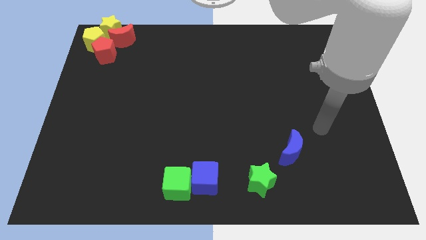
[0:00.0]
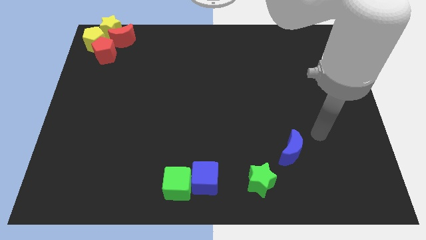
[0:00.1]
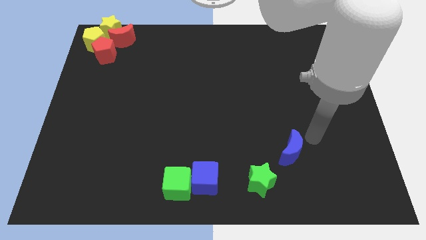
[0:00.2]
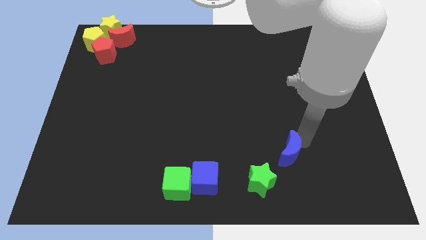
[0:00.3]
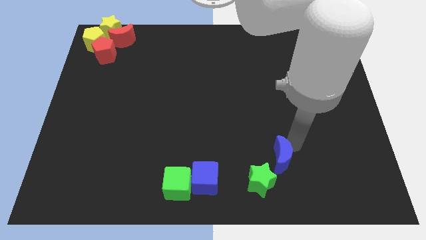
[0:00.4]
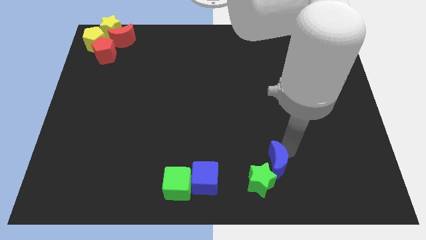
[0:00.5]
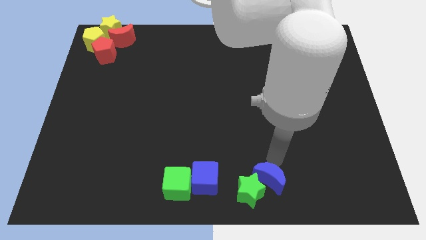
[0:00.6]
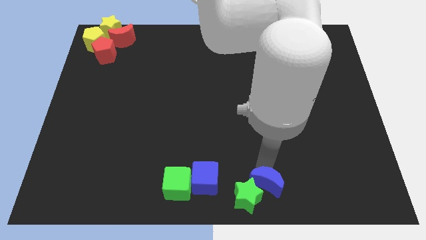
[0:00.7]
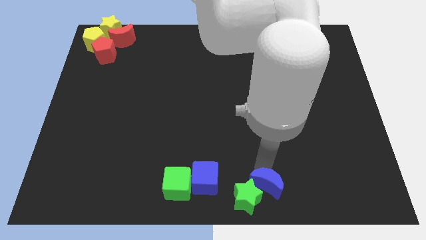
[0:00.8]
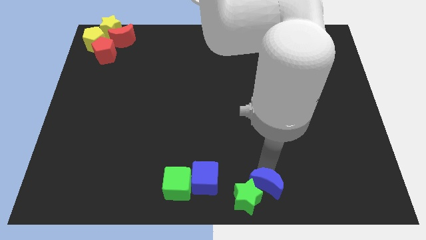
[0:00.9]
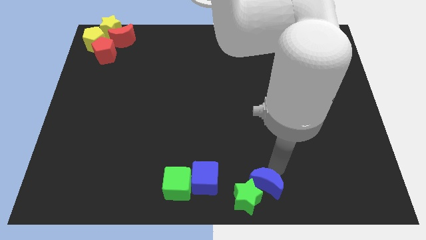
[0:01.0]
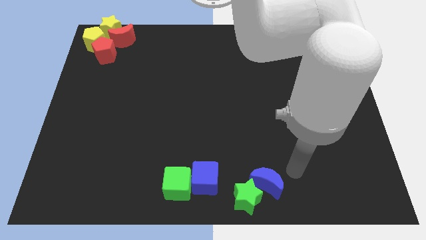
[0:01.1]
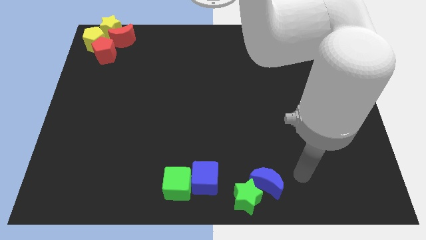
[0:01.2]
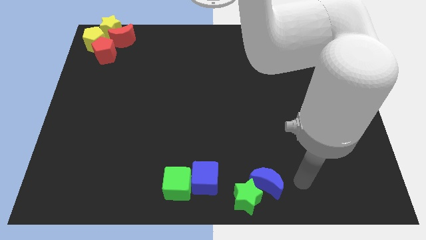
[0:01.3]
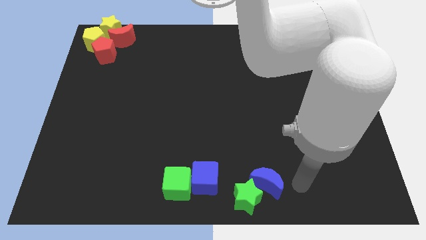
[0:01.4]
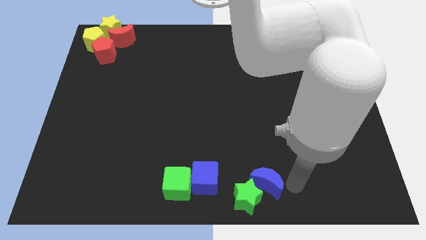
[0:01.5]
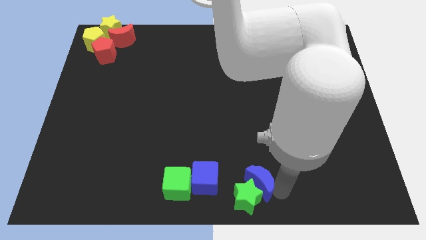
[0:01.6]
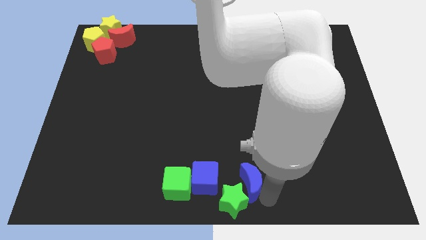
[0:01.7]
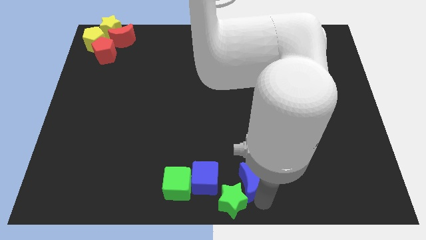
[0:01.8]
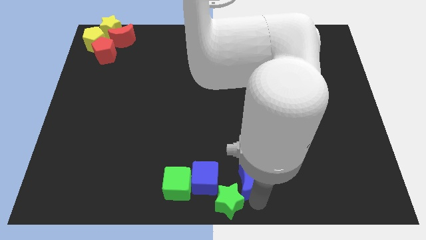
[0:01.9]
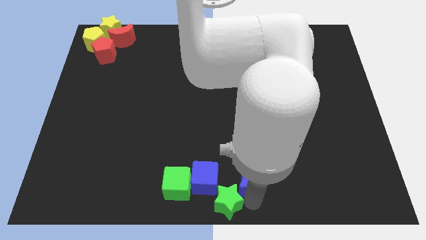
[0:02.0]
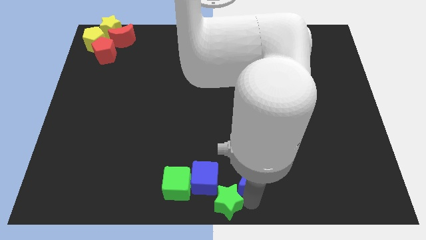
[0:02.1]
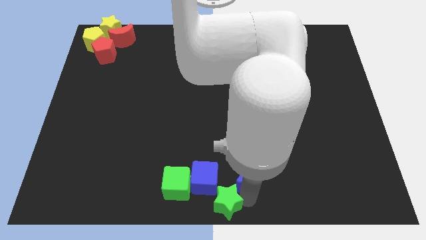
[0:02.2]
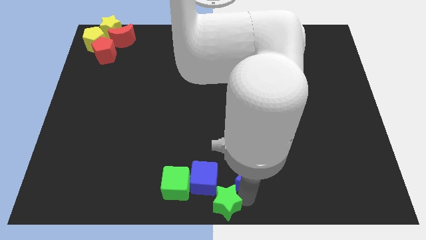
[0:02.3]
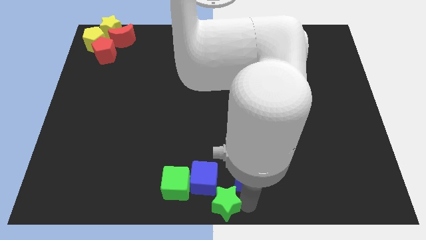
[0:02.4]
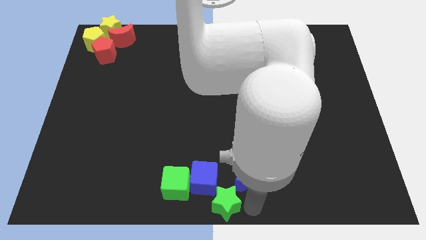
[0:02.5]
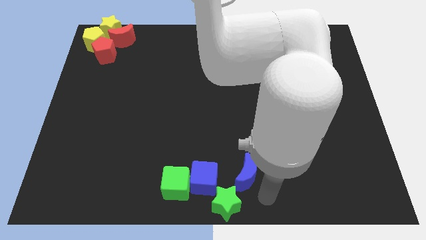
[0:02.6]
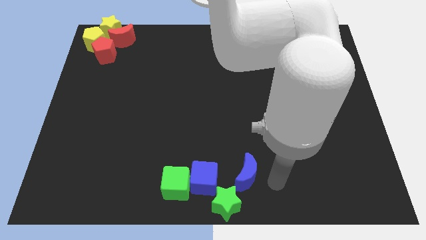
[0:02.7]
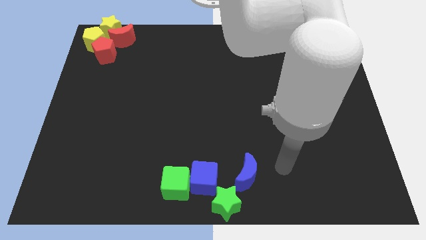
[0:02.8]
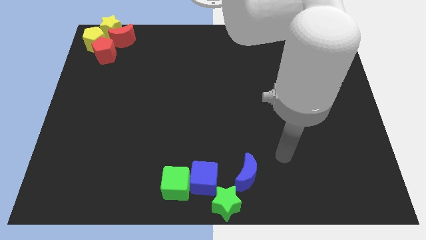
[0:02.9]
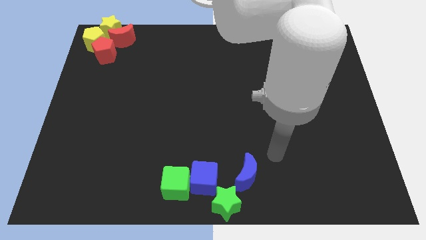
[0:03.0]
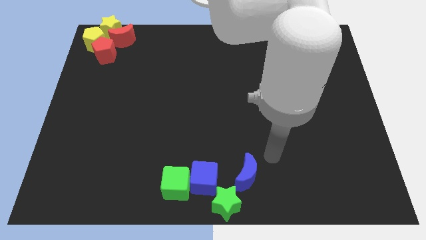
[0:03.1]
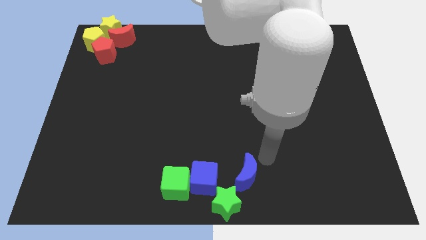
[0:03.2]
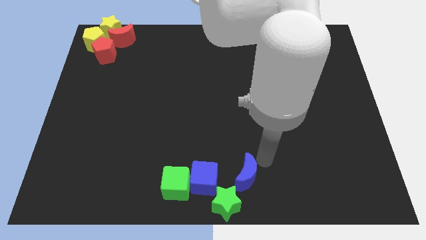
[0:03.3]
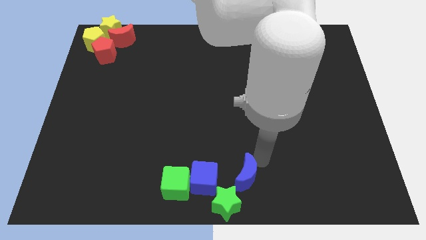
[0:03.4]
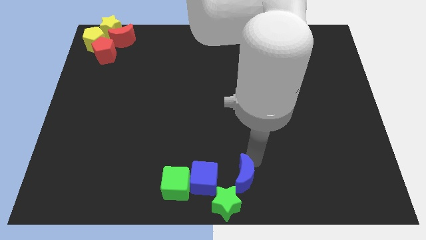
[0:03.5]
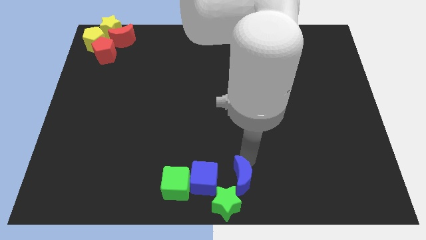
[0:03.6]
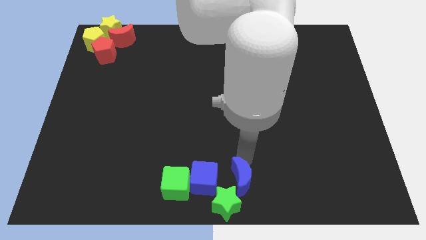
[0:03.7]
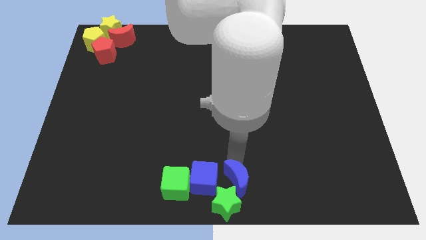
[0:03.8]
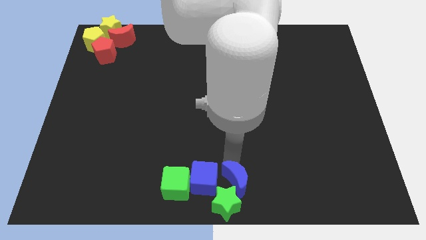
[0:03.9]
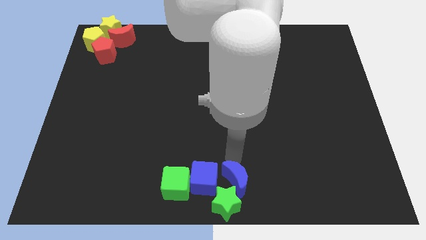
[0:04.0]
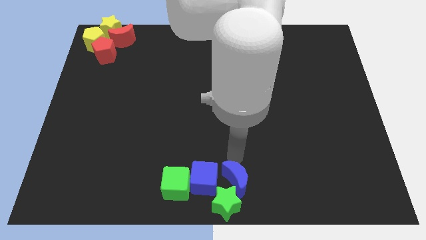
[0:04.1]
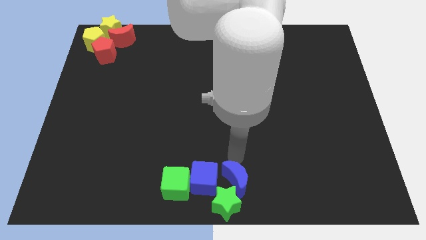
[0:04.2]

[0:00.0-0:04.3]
move the blue moon and green star to the bottom center of the board

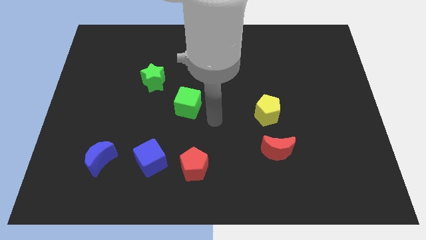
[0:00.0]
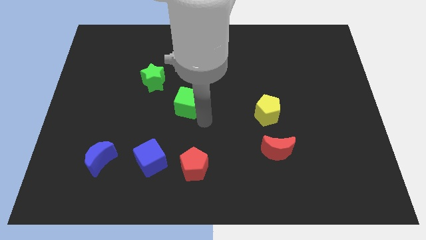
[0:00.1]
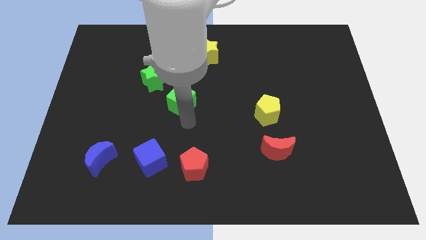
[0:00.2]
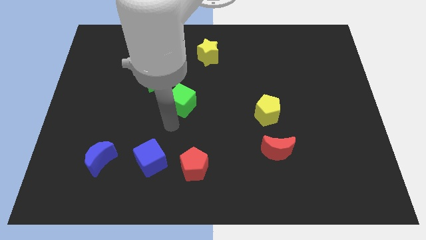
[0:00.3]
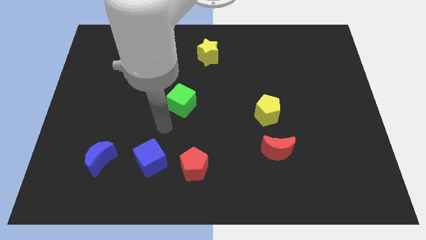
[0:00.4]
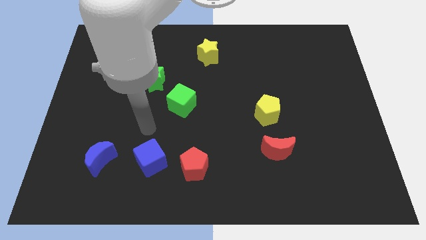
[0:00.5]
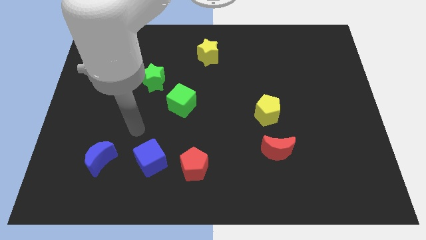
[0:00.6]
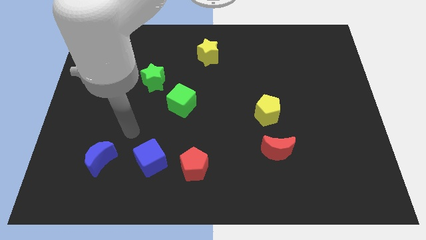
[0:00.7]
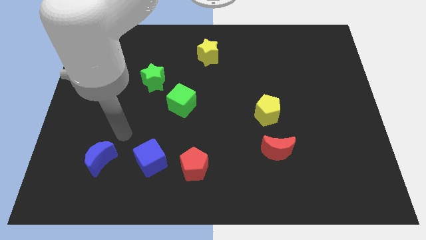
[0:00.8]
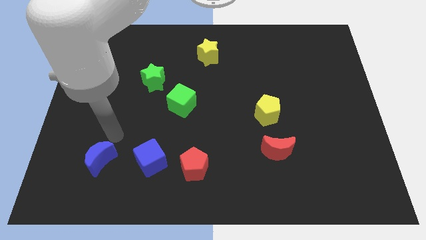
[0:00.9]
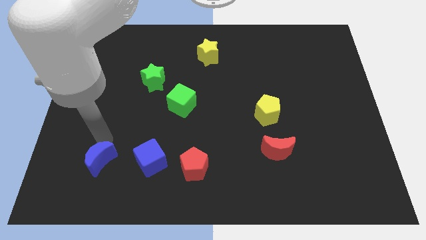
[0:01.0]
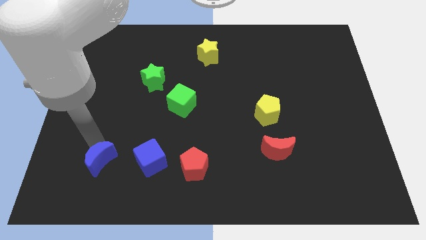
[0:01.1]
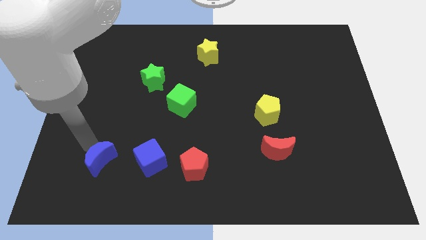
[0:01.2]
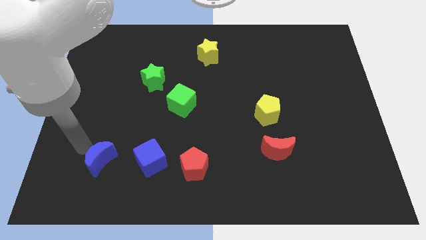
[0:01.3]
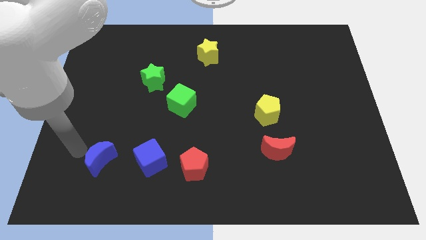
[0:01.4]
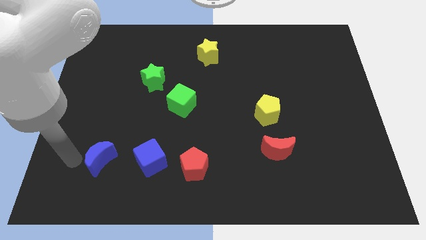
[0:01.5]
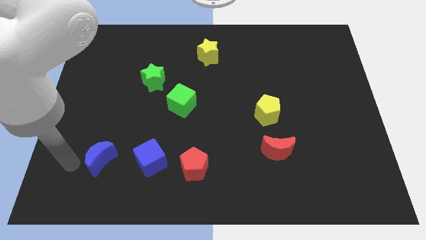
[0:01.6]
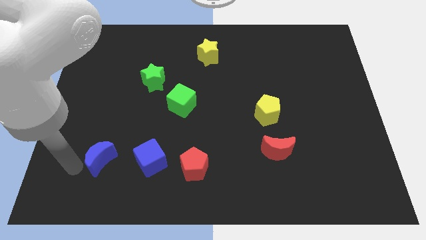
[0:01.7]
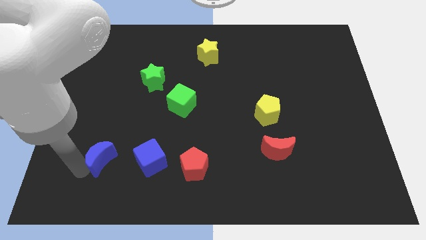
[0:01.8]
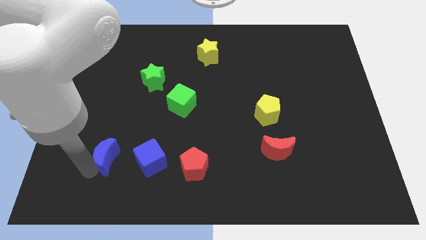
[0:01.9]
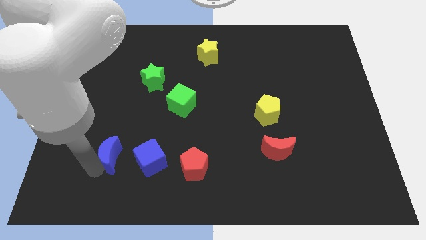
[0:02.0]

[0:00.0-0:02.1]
move the blue crescent slightly to the blue cube

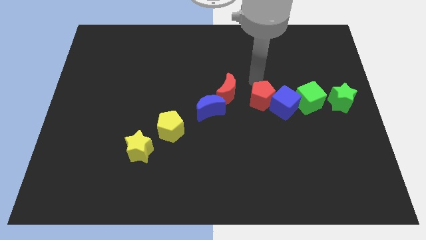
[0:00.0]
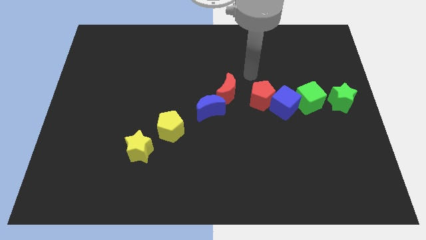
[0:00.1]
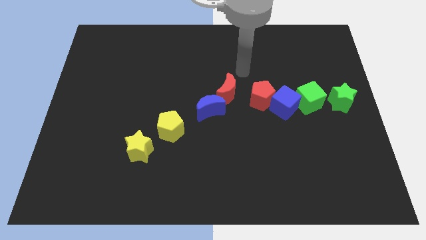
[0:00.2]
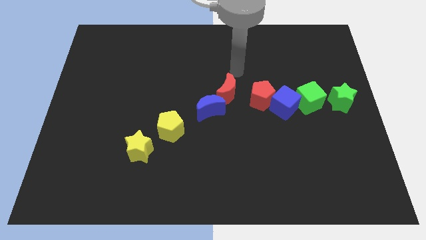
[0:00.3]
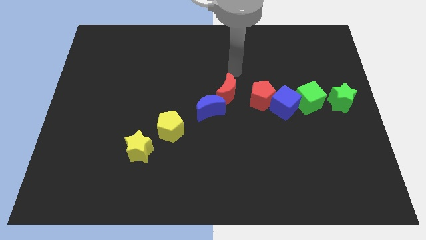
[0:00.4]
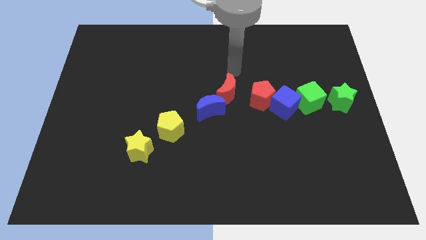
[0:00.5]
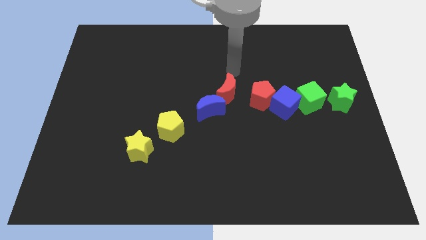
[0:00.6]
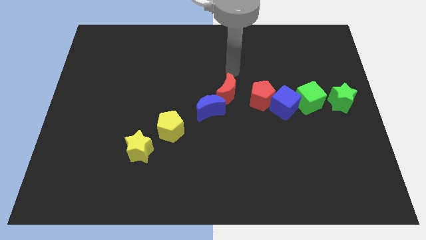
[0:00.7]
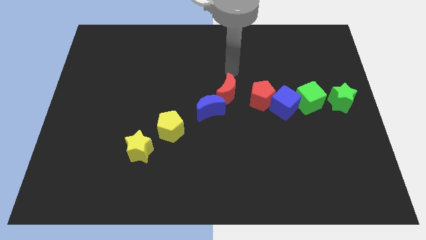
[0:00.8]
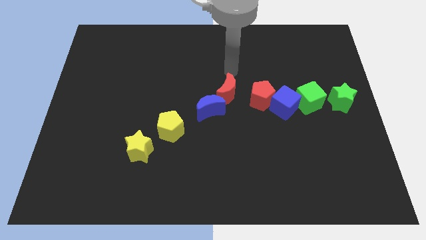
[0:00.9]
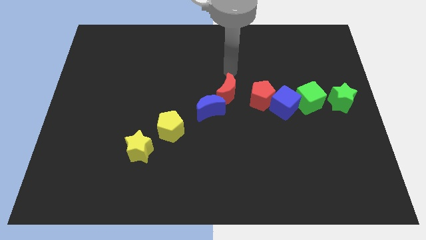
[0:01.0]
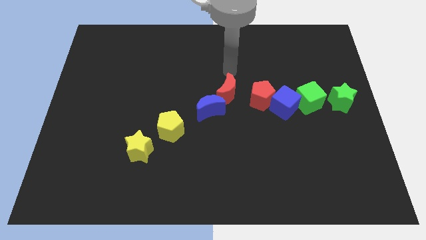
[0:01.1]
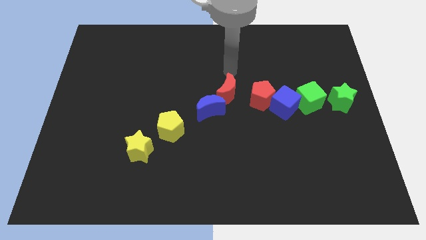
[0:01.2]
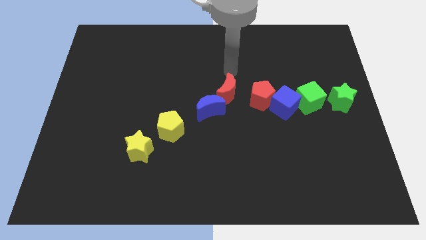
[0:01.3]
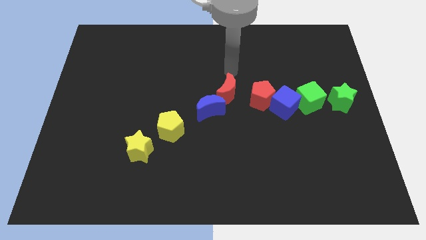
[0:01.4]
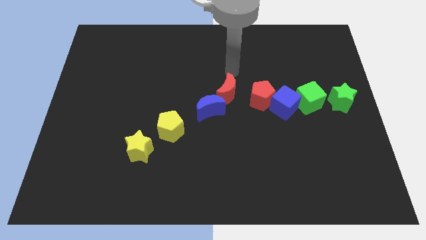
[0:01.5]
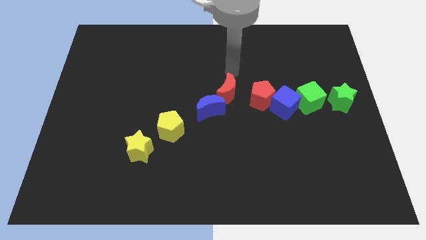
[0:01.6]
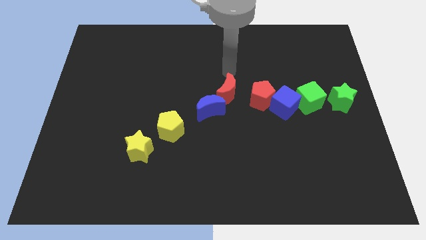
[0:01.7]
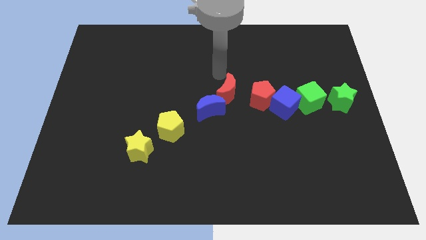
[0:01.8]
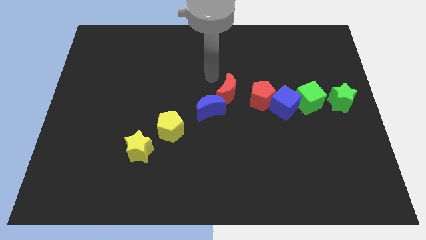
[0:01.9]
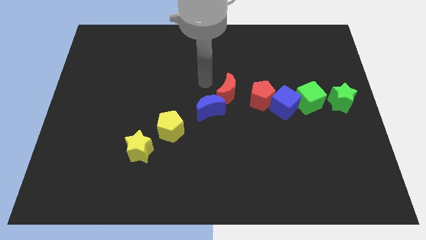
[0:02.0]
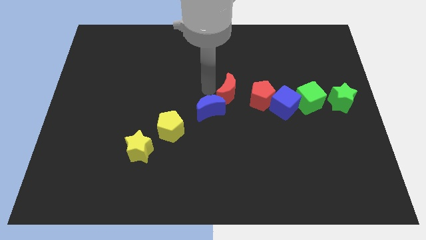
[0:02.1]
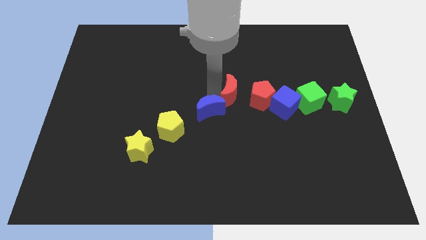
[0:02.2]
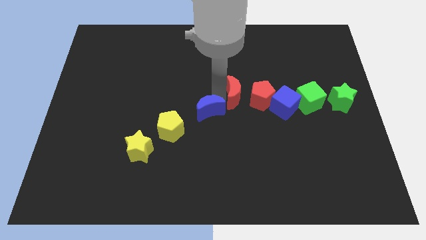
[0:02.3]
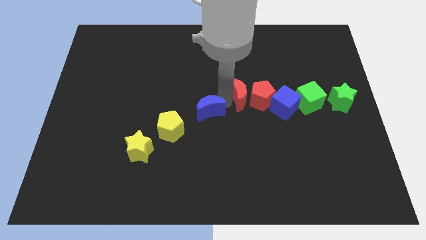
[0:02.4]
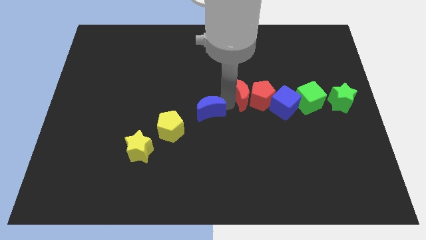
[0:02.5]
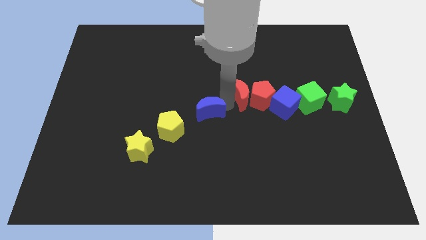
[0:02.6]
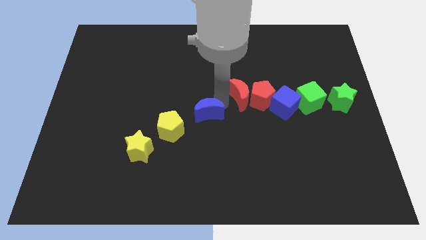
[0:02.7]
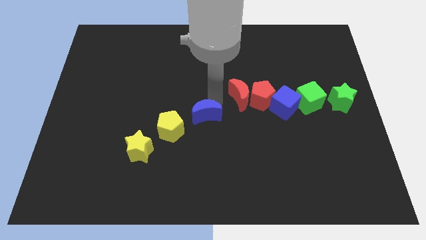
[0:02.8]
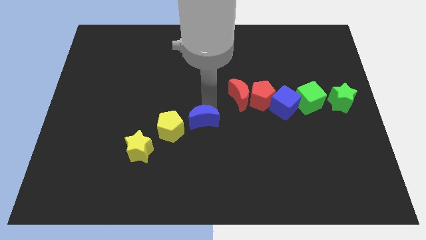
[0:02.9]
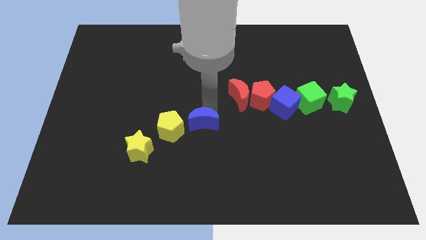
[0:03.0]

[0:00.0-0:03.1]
move red moon on the left red pentagon
